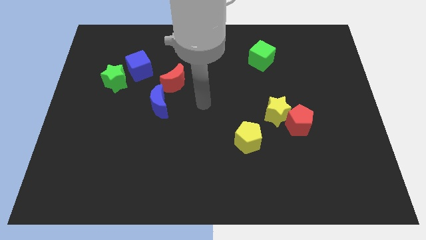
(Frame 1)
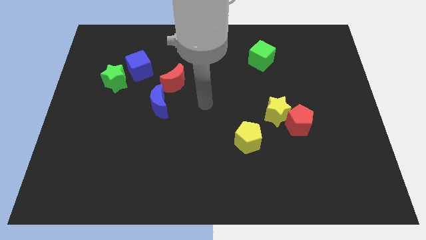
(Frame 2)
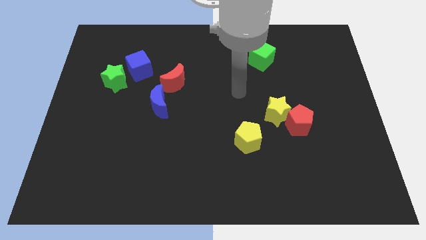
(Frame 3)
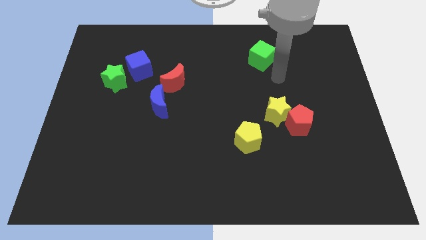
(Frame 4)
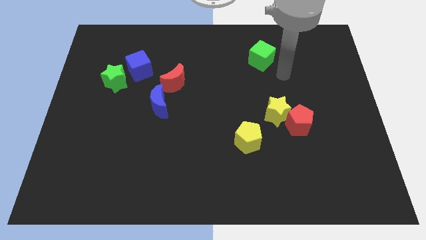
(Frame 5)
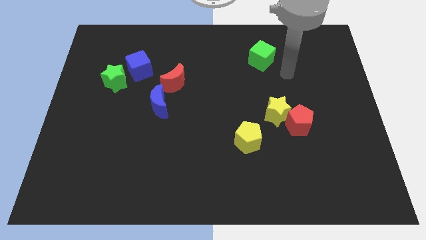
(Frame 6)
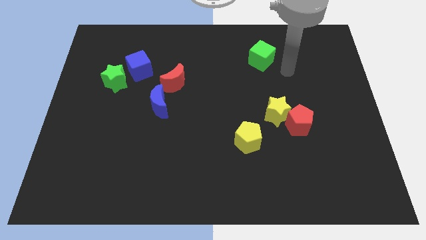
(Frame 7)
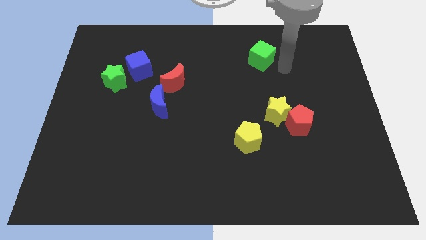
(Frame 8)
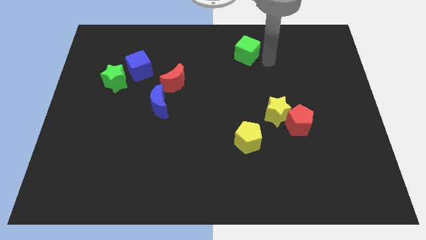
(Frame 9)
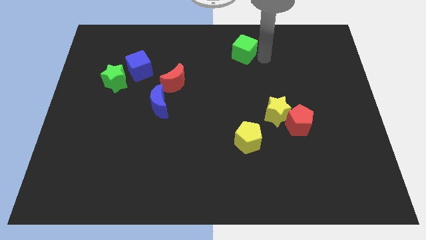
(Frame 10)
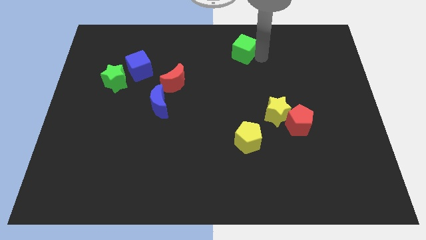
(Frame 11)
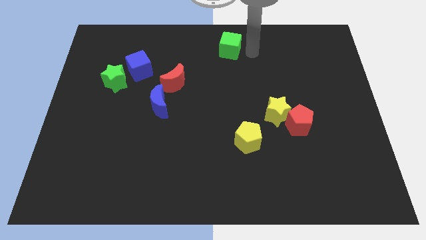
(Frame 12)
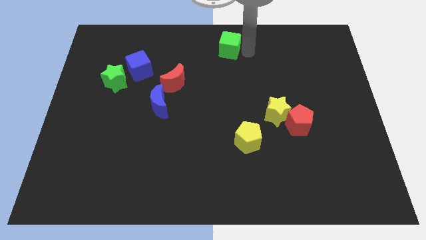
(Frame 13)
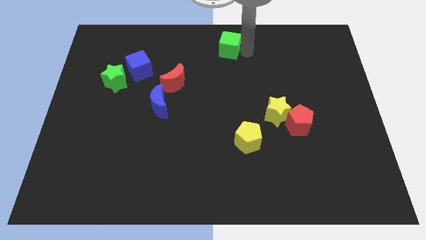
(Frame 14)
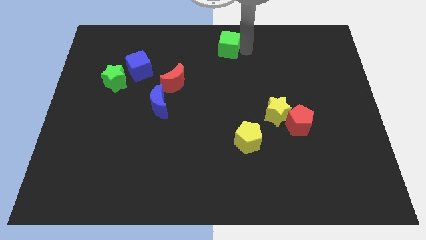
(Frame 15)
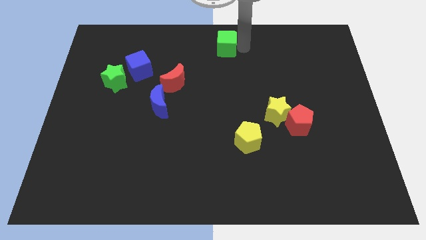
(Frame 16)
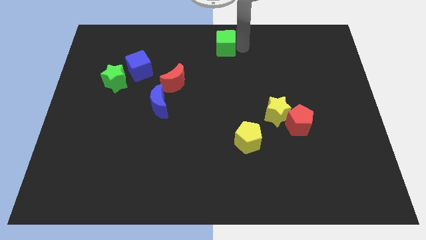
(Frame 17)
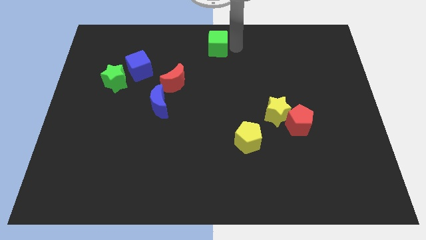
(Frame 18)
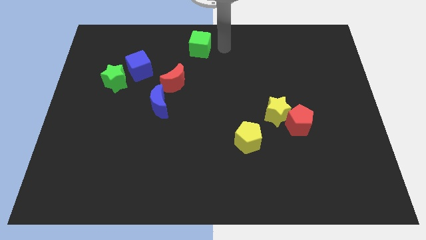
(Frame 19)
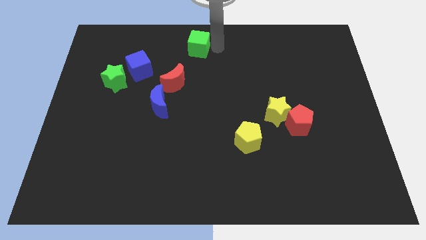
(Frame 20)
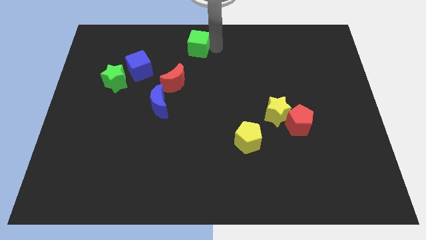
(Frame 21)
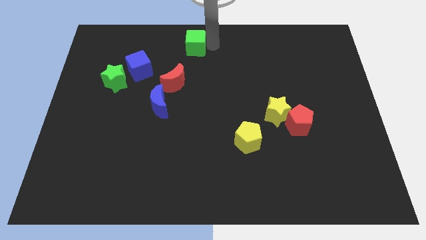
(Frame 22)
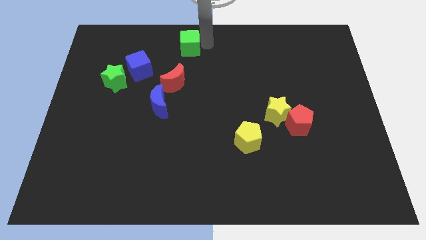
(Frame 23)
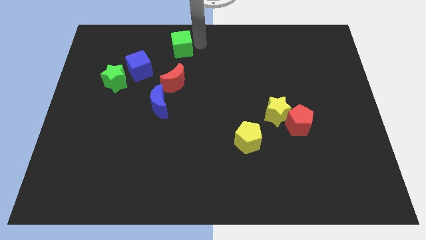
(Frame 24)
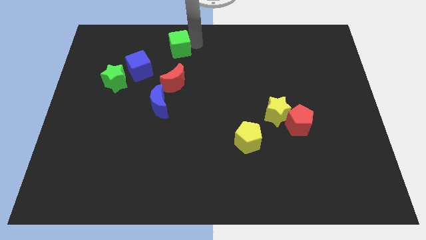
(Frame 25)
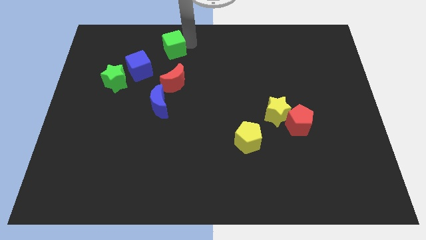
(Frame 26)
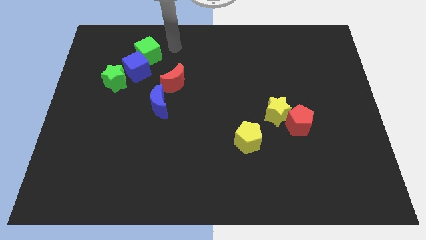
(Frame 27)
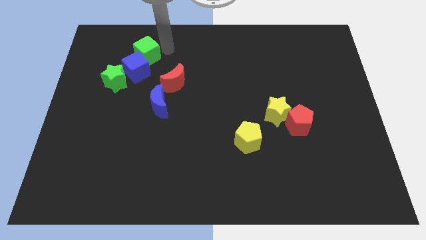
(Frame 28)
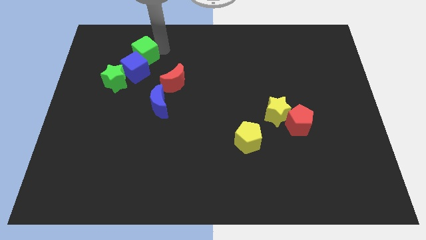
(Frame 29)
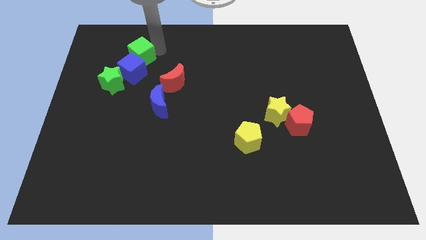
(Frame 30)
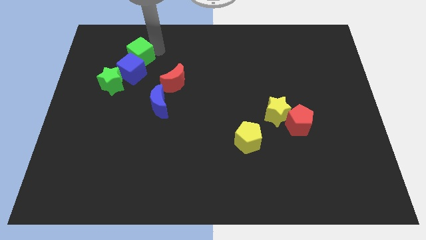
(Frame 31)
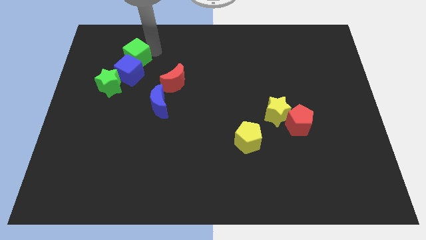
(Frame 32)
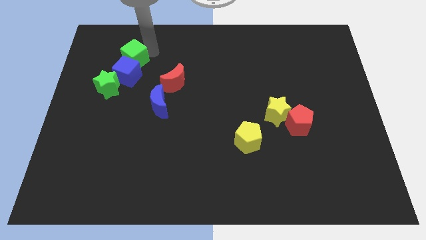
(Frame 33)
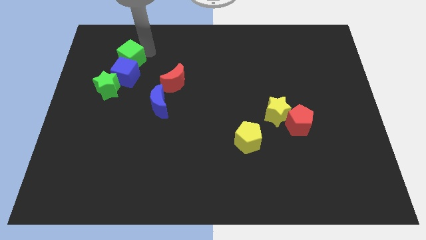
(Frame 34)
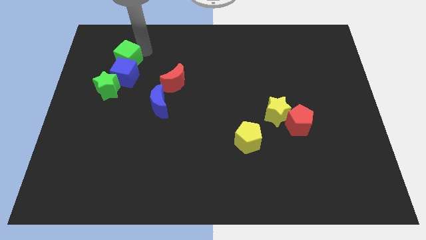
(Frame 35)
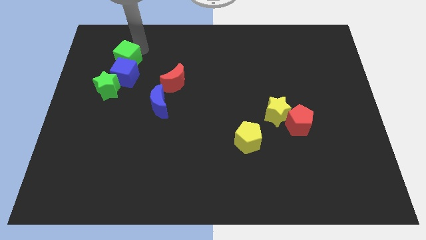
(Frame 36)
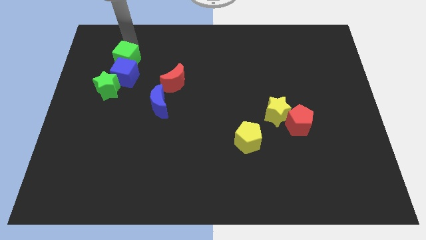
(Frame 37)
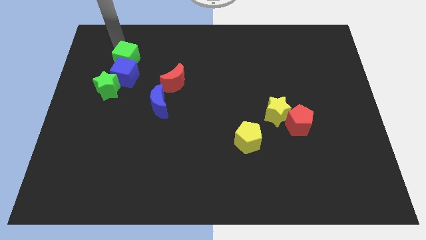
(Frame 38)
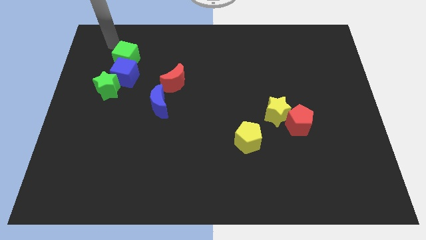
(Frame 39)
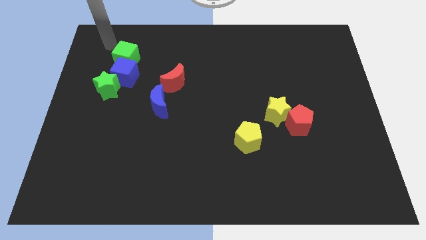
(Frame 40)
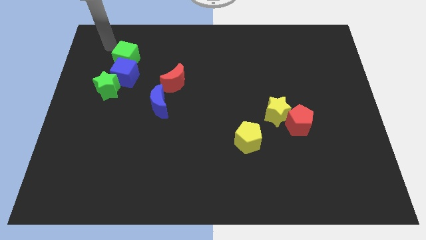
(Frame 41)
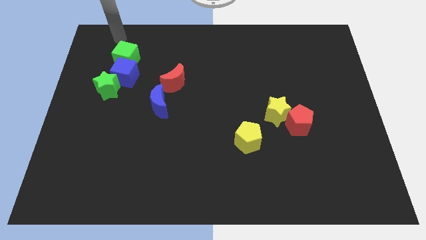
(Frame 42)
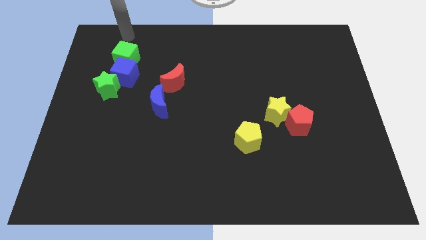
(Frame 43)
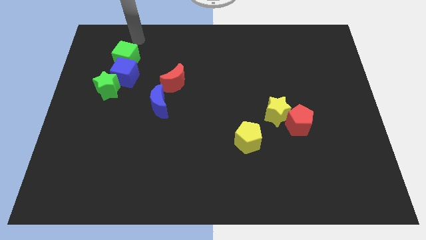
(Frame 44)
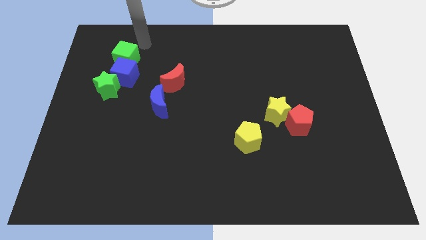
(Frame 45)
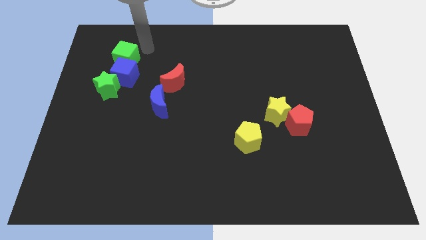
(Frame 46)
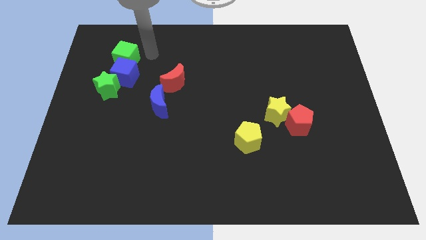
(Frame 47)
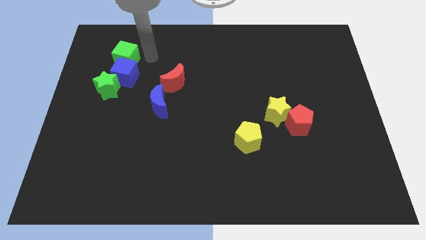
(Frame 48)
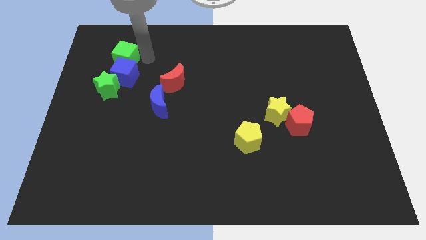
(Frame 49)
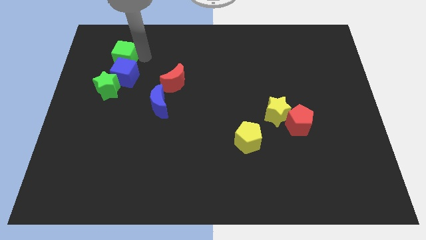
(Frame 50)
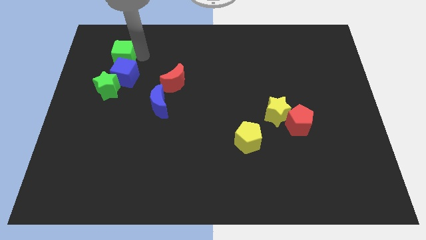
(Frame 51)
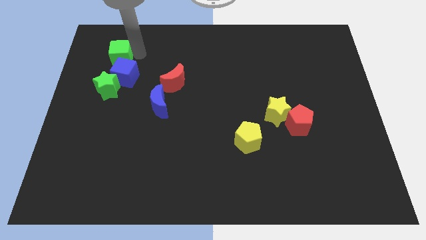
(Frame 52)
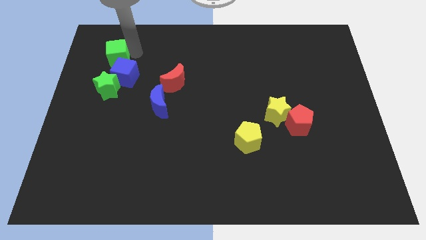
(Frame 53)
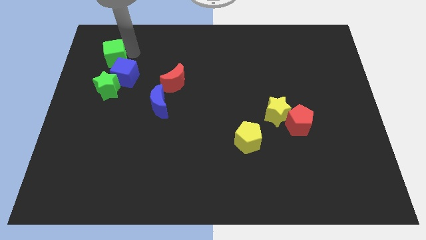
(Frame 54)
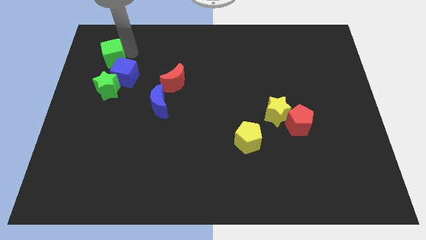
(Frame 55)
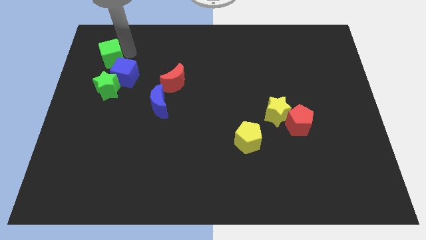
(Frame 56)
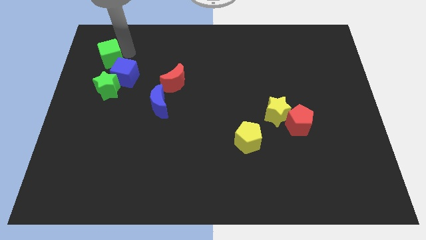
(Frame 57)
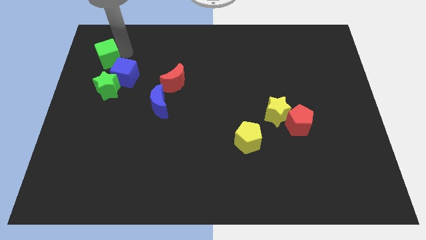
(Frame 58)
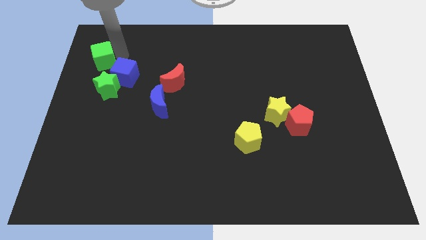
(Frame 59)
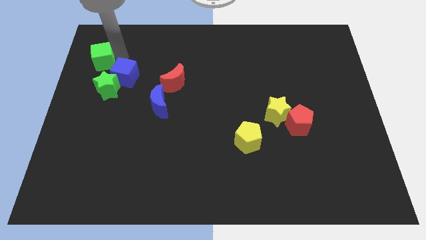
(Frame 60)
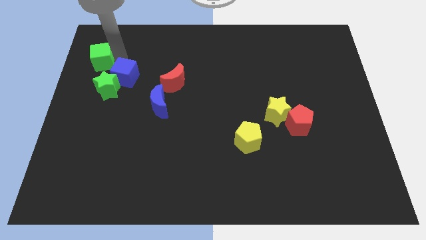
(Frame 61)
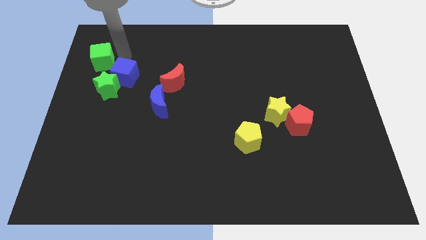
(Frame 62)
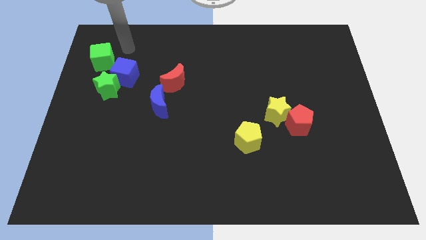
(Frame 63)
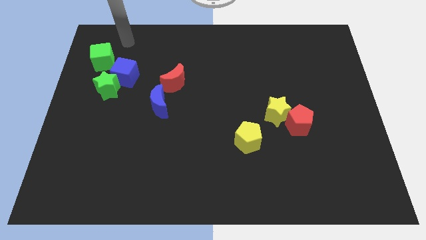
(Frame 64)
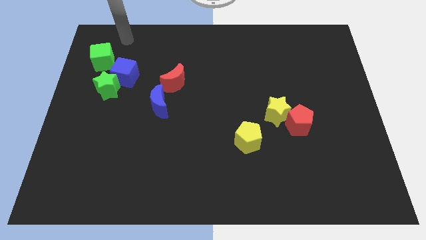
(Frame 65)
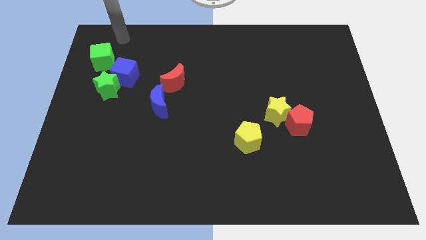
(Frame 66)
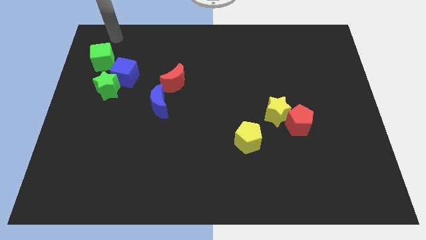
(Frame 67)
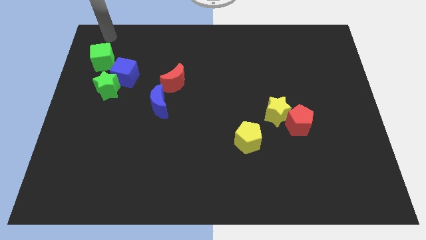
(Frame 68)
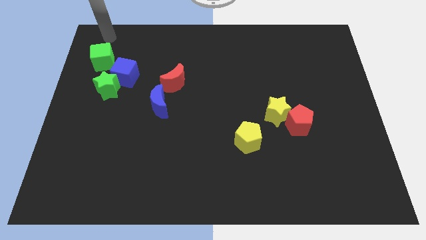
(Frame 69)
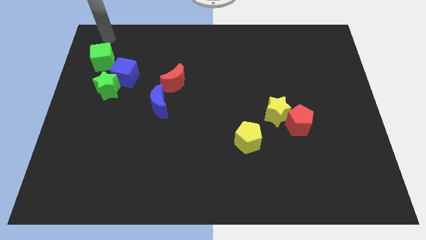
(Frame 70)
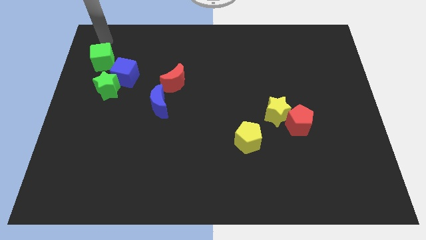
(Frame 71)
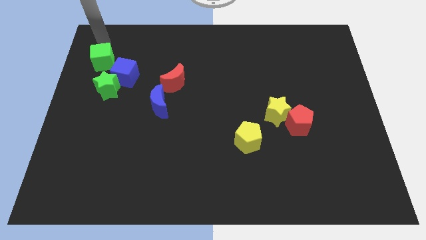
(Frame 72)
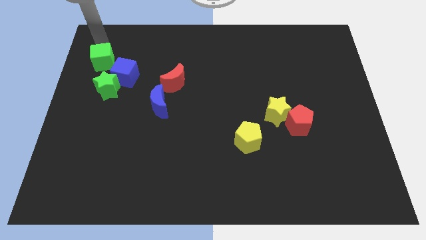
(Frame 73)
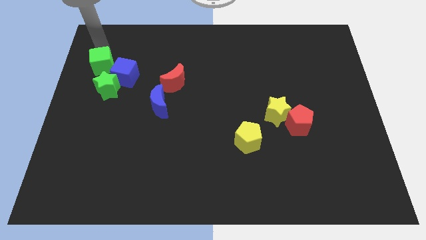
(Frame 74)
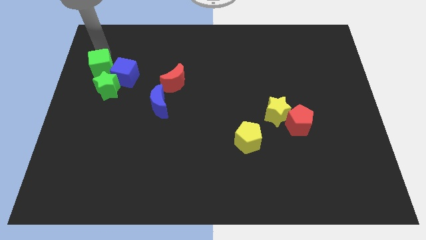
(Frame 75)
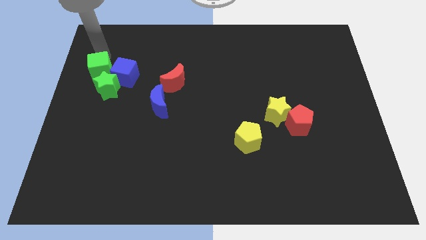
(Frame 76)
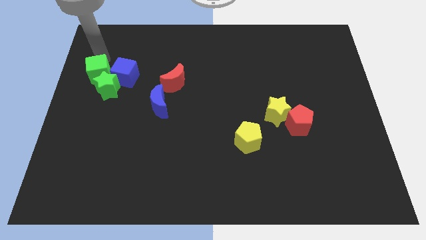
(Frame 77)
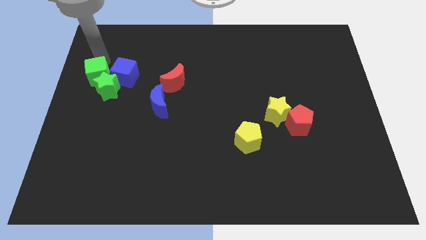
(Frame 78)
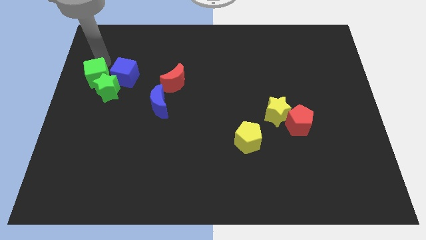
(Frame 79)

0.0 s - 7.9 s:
move the green cube next to the green star
